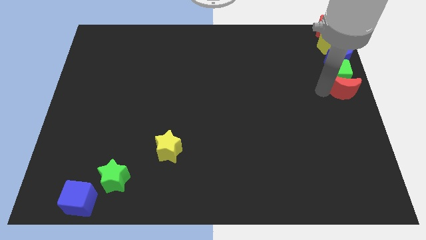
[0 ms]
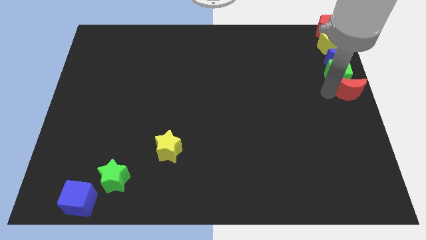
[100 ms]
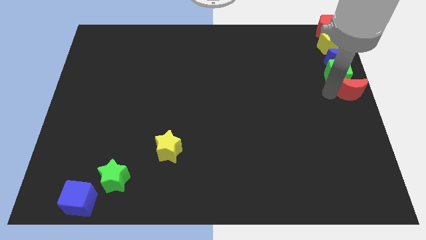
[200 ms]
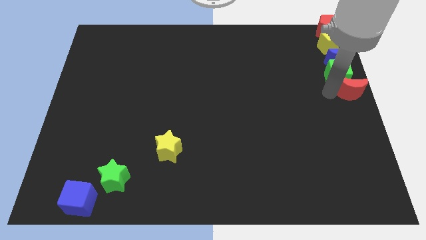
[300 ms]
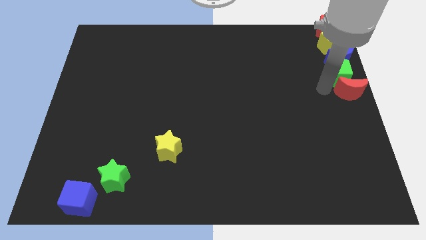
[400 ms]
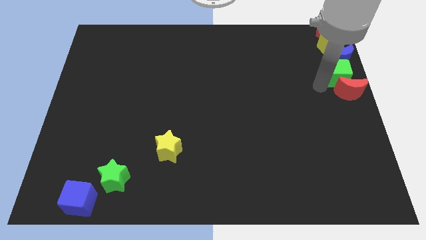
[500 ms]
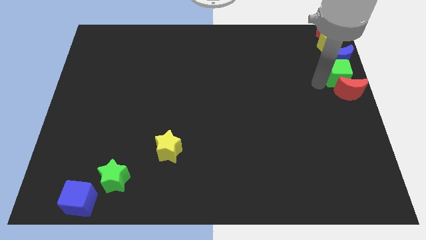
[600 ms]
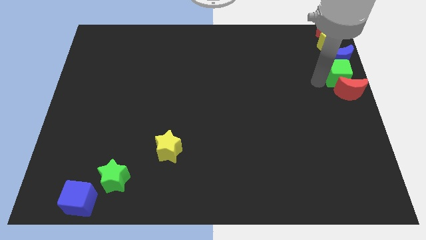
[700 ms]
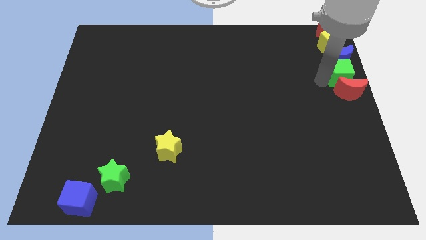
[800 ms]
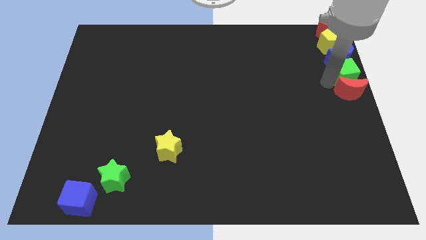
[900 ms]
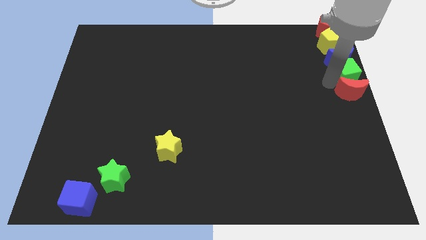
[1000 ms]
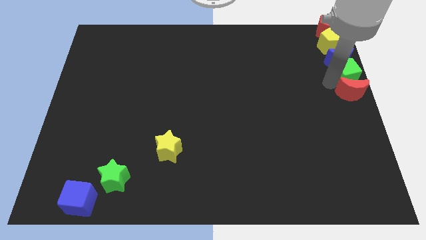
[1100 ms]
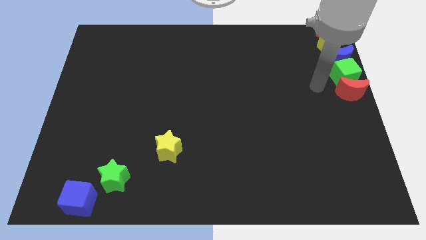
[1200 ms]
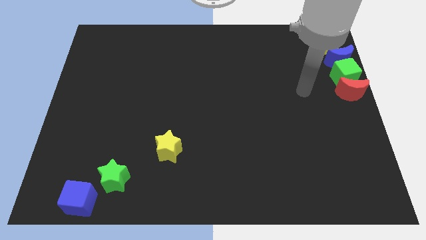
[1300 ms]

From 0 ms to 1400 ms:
push the red moon and green cube towards the right side of the board

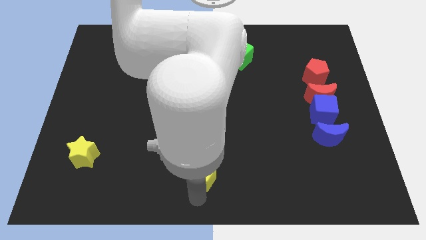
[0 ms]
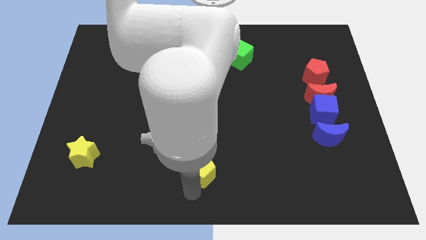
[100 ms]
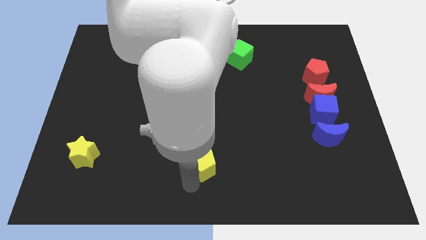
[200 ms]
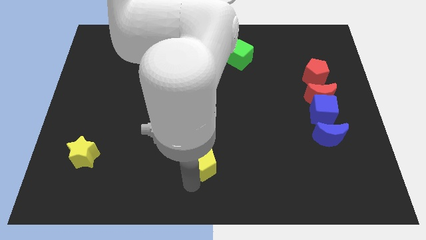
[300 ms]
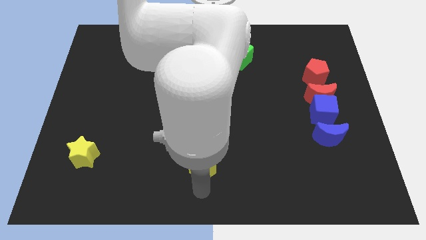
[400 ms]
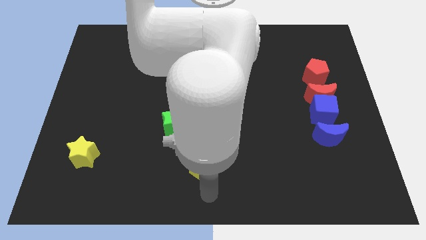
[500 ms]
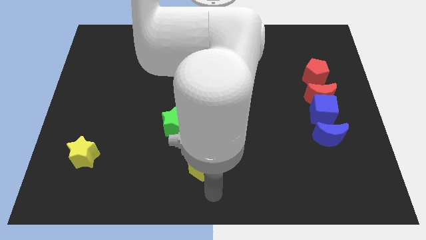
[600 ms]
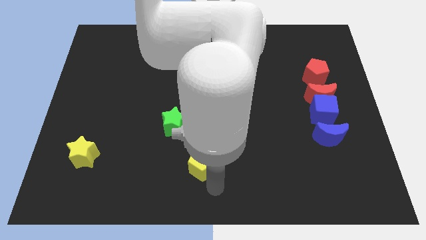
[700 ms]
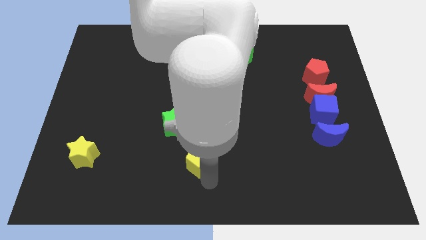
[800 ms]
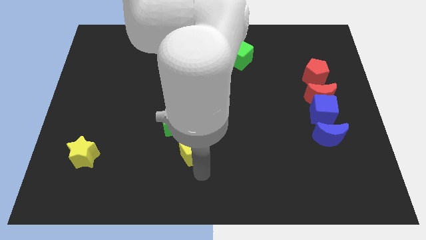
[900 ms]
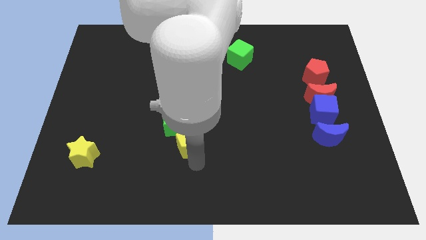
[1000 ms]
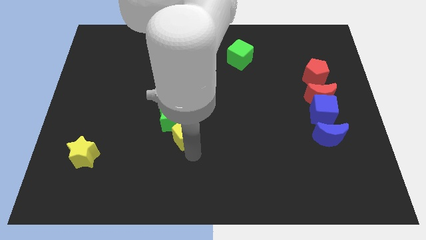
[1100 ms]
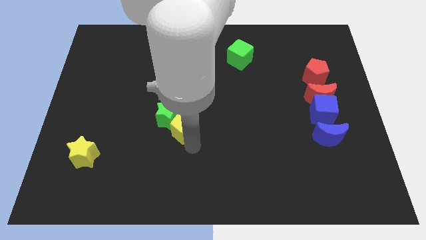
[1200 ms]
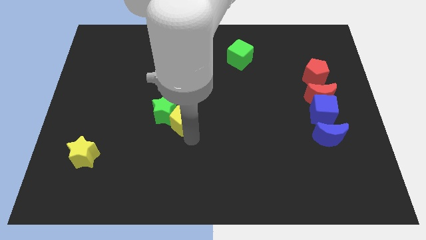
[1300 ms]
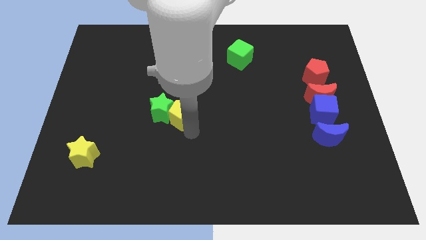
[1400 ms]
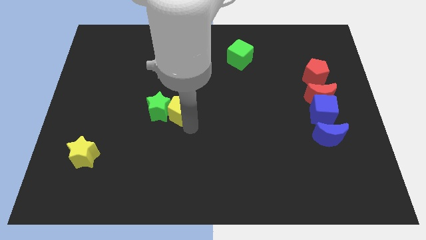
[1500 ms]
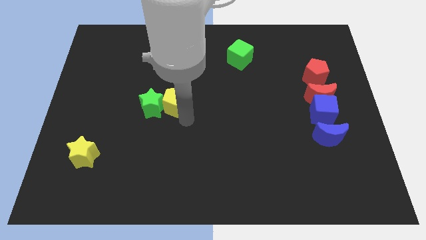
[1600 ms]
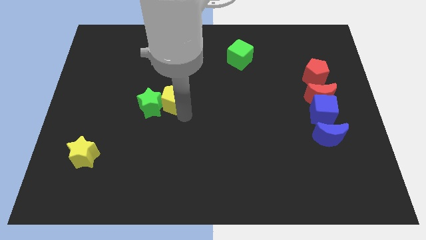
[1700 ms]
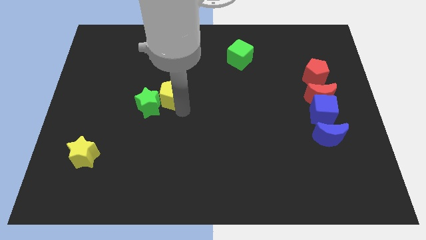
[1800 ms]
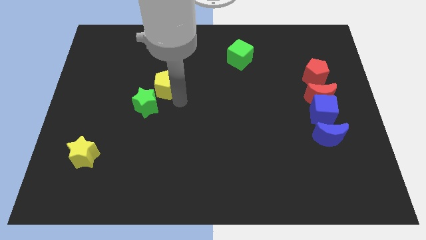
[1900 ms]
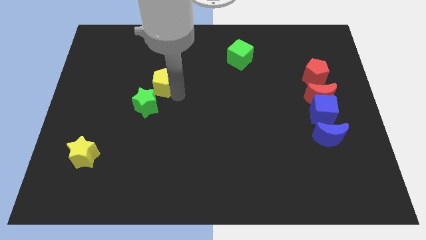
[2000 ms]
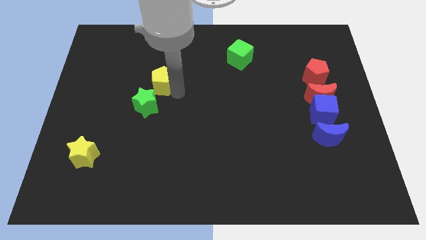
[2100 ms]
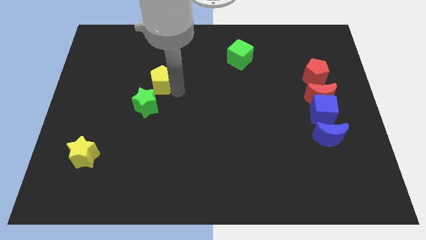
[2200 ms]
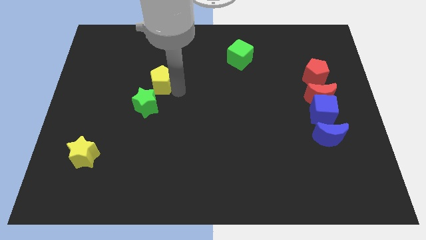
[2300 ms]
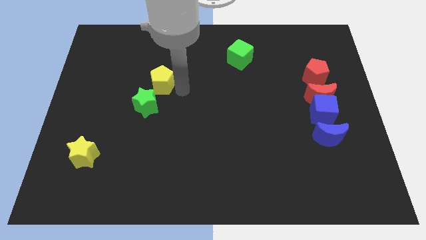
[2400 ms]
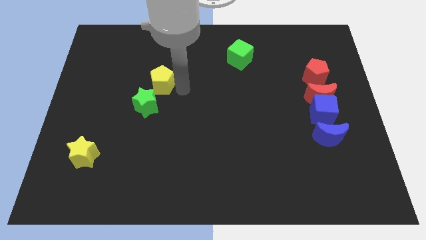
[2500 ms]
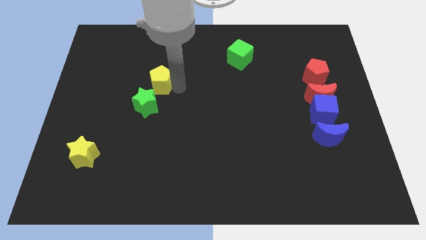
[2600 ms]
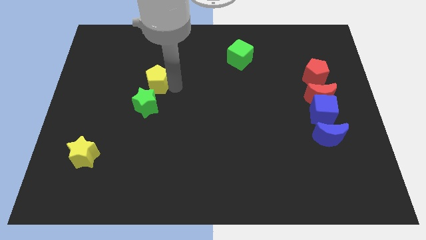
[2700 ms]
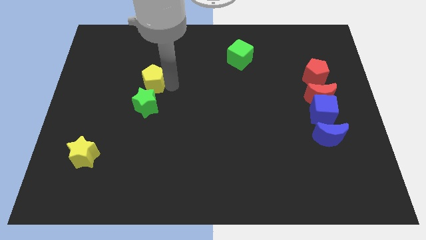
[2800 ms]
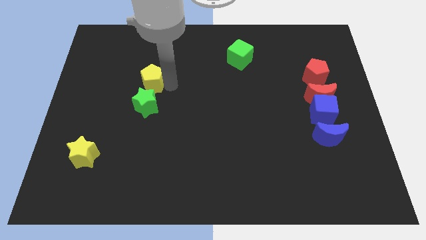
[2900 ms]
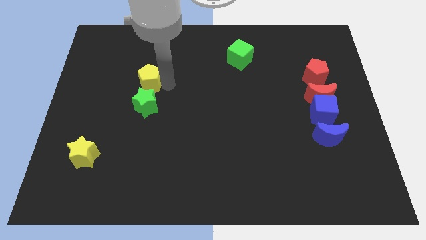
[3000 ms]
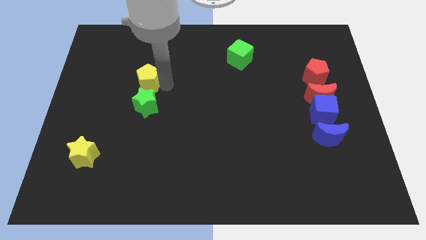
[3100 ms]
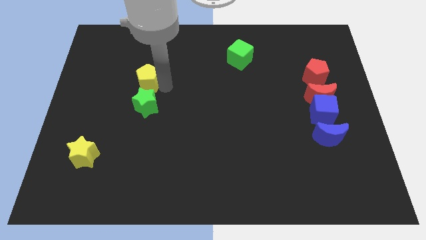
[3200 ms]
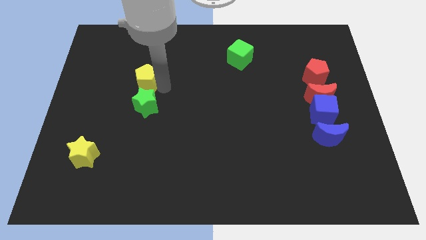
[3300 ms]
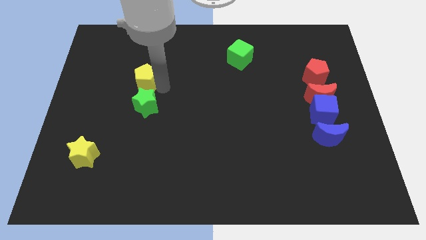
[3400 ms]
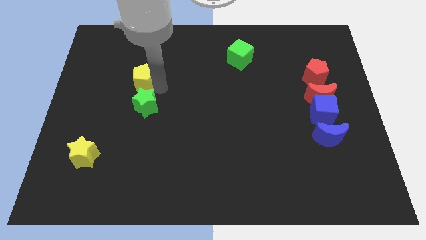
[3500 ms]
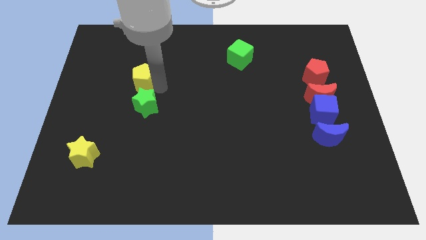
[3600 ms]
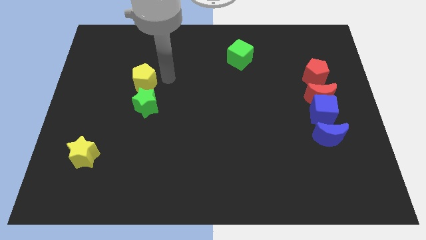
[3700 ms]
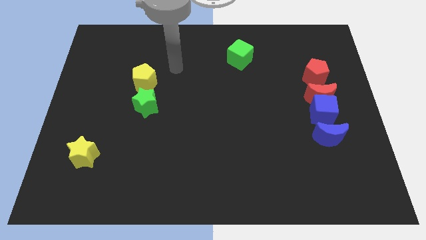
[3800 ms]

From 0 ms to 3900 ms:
place the yellow pentagon above the green star

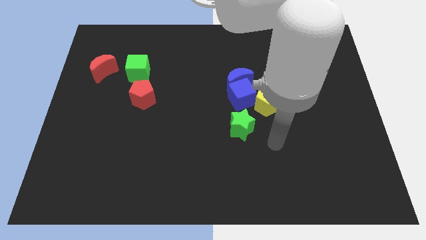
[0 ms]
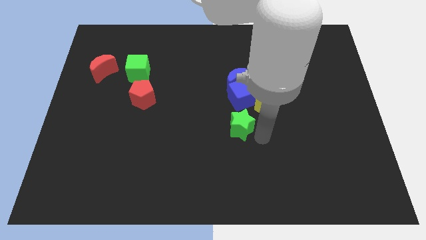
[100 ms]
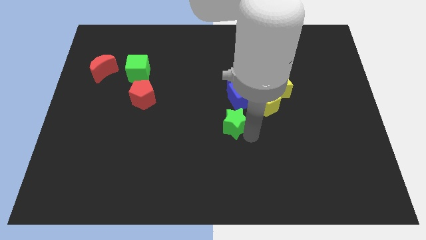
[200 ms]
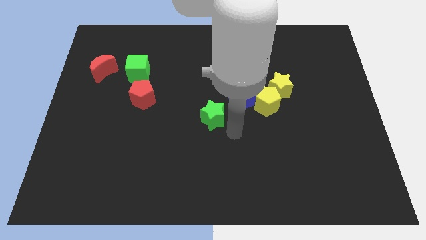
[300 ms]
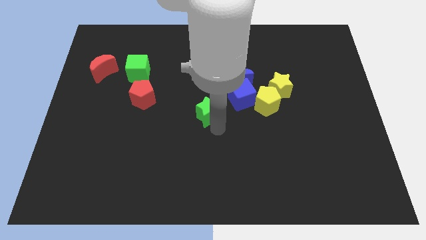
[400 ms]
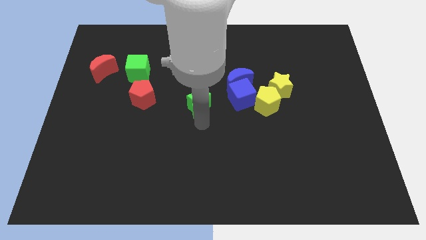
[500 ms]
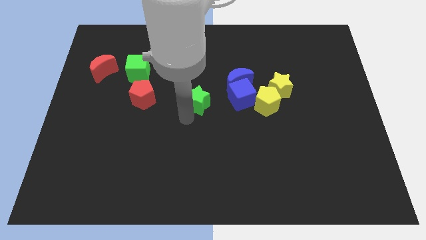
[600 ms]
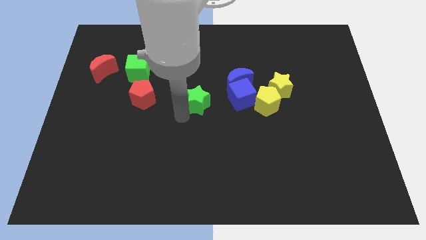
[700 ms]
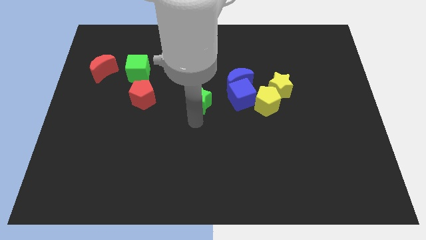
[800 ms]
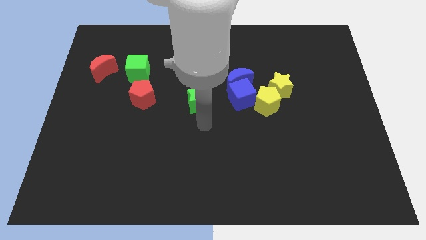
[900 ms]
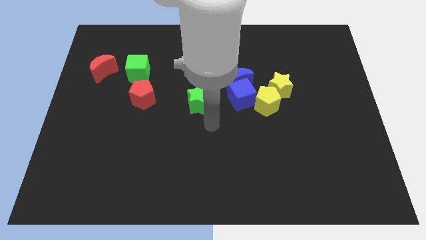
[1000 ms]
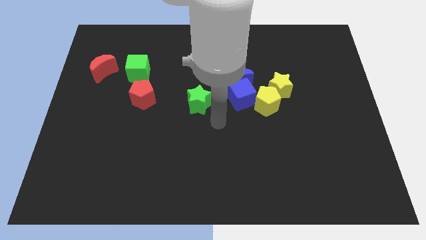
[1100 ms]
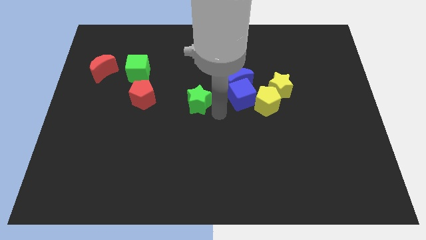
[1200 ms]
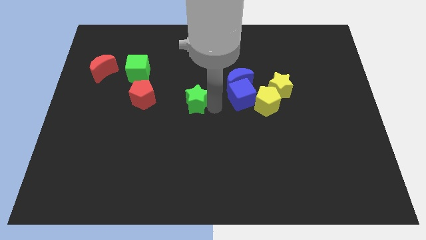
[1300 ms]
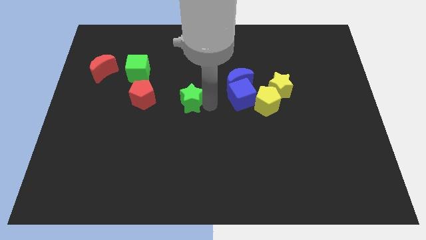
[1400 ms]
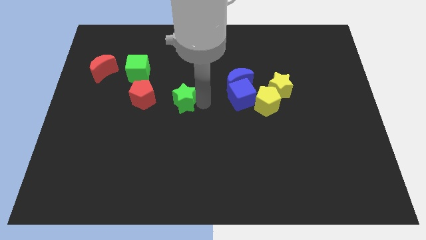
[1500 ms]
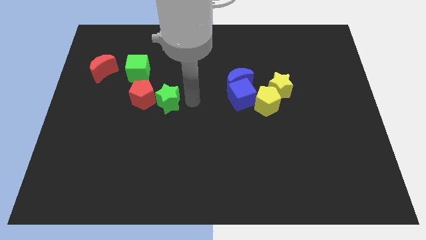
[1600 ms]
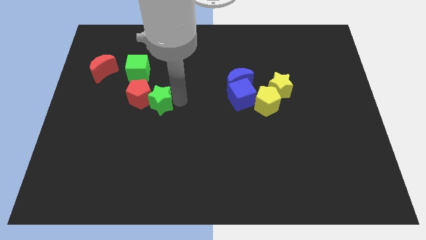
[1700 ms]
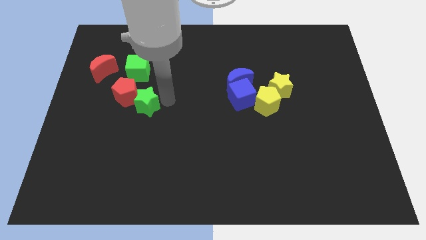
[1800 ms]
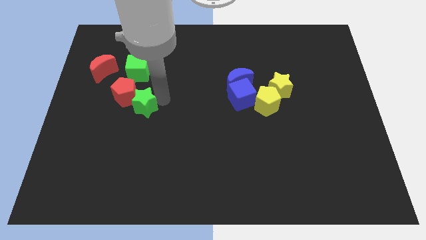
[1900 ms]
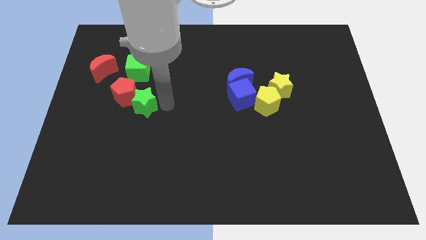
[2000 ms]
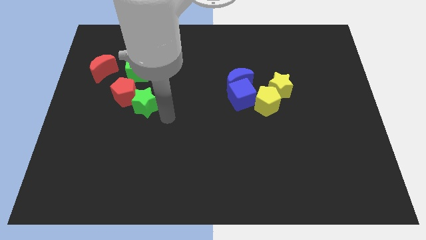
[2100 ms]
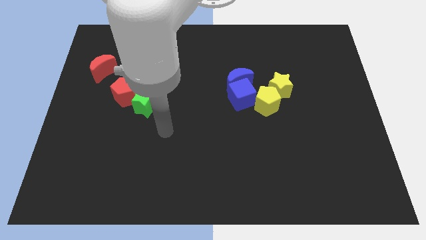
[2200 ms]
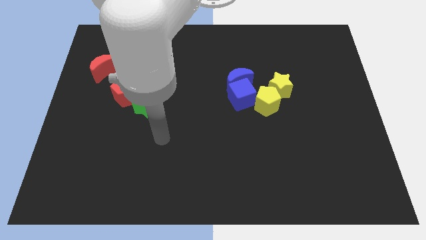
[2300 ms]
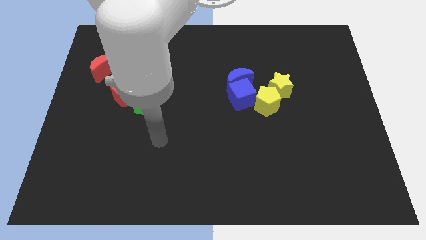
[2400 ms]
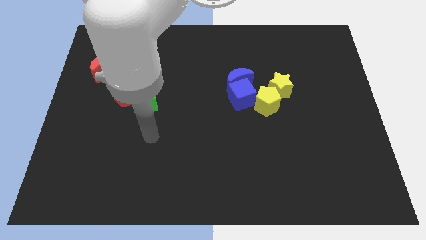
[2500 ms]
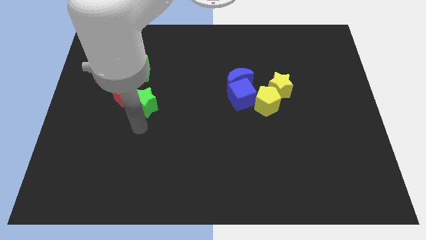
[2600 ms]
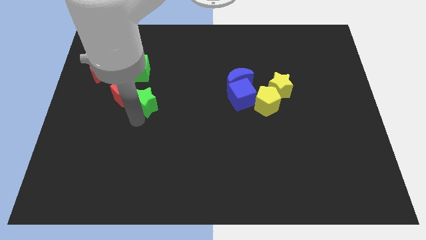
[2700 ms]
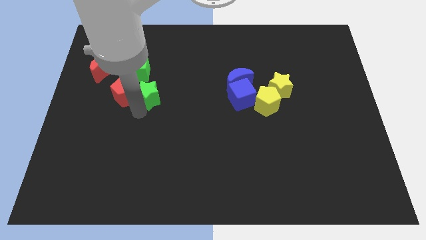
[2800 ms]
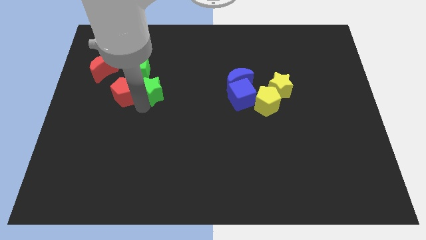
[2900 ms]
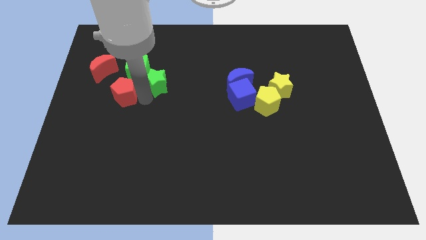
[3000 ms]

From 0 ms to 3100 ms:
move the green star to the right of the red pentagon

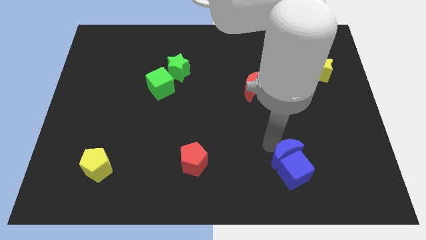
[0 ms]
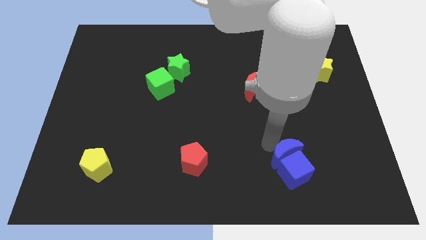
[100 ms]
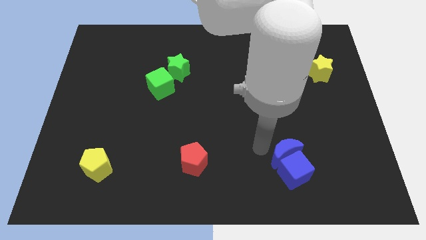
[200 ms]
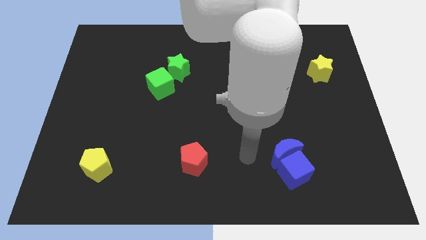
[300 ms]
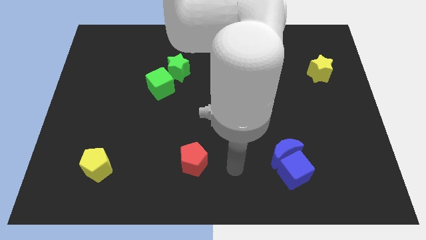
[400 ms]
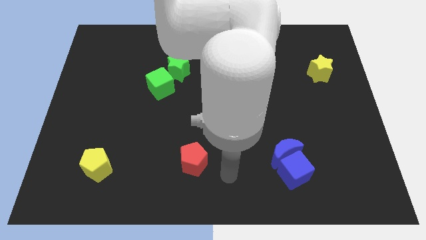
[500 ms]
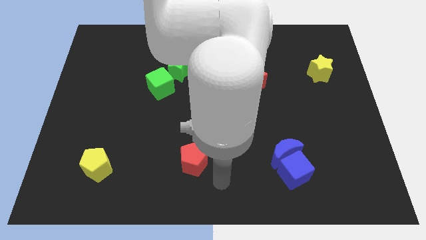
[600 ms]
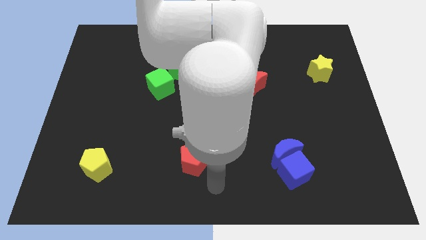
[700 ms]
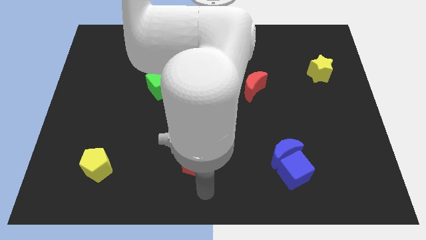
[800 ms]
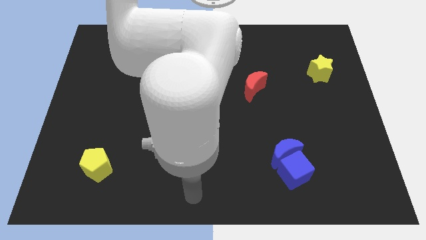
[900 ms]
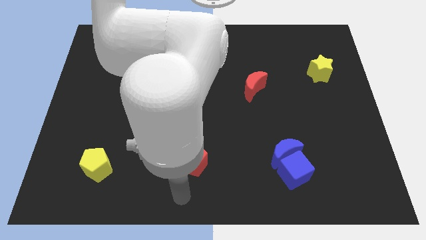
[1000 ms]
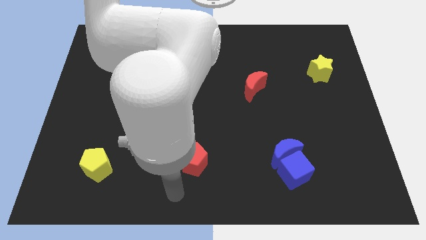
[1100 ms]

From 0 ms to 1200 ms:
move the arm away from the blue moon
